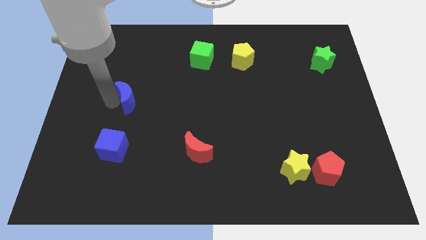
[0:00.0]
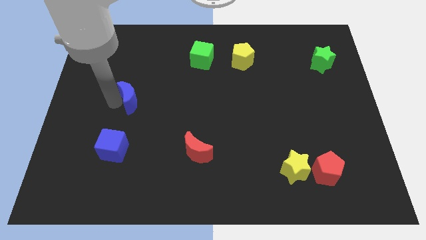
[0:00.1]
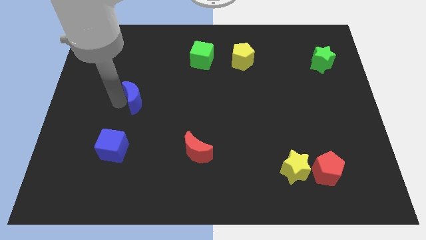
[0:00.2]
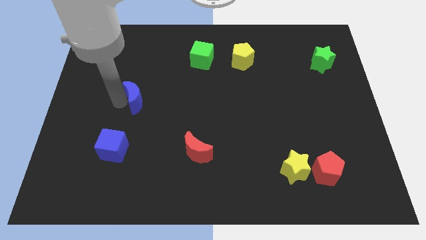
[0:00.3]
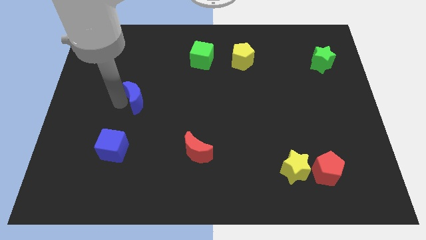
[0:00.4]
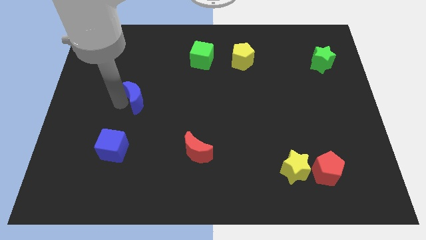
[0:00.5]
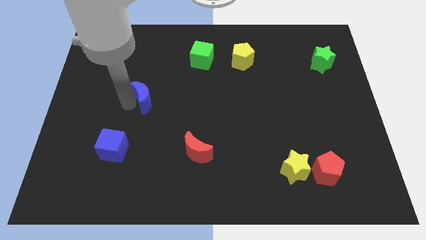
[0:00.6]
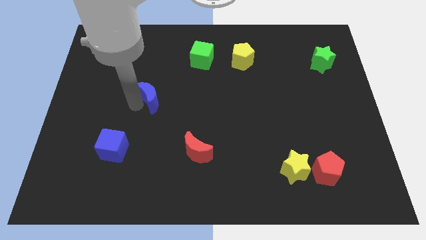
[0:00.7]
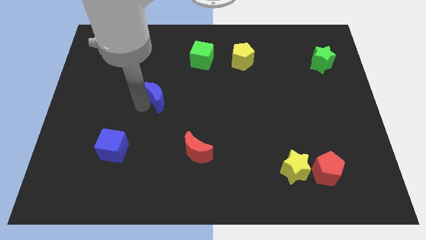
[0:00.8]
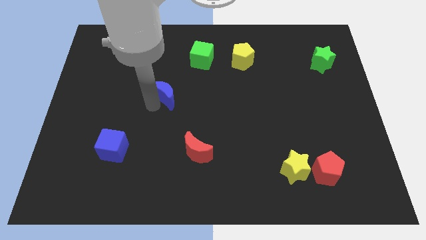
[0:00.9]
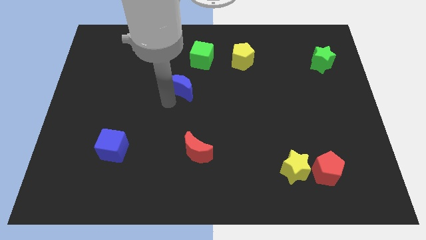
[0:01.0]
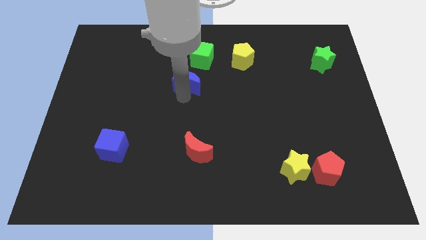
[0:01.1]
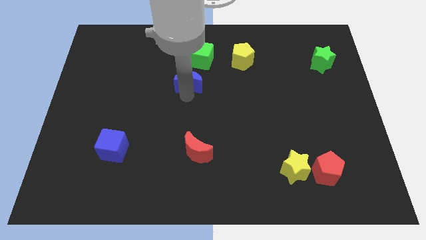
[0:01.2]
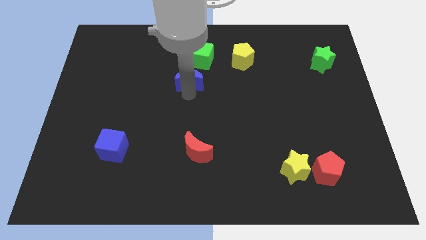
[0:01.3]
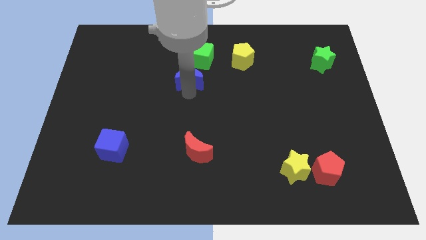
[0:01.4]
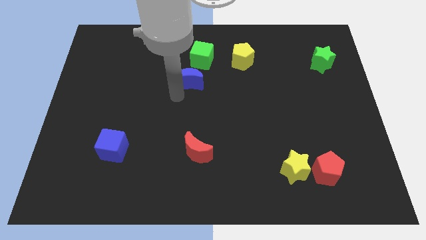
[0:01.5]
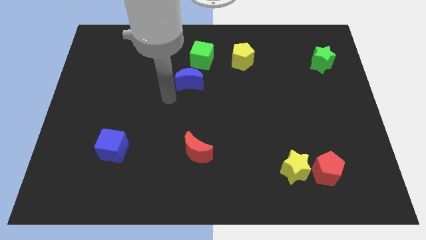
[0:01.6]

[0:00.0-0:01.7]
place the blue crescent under the green cube

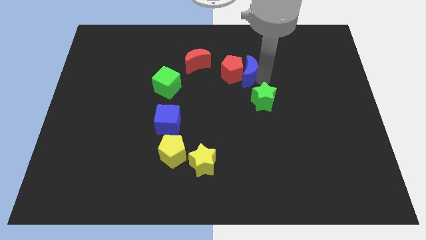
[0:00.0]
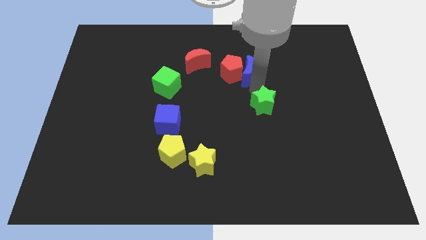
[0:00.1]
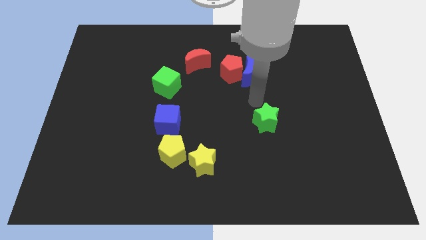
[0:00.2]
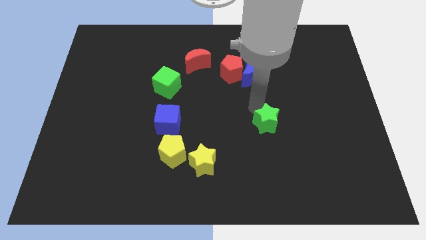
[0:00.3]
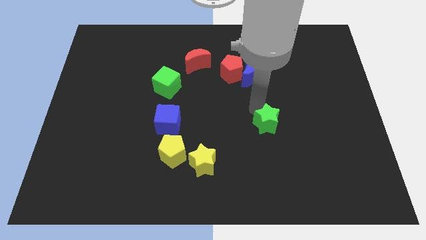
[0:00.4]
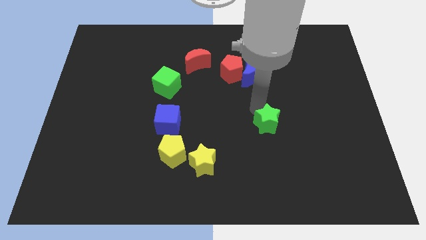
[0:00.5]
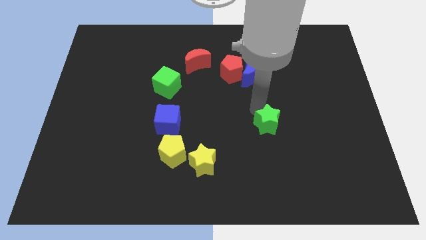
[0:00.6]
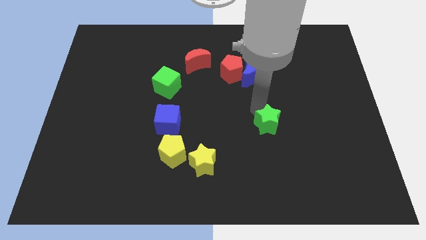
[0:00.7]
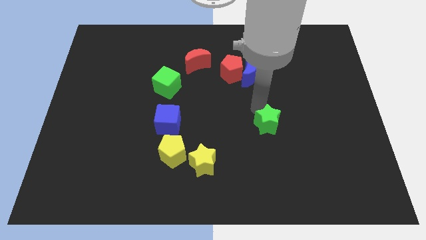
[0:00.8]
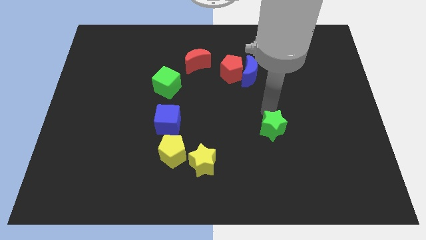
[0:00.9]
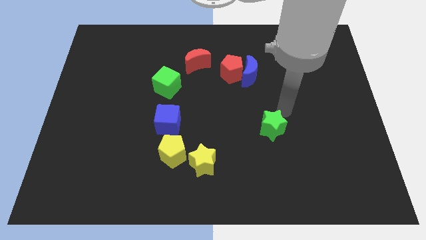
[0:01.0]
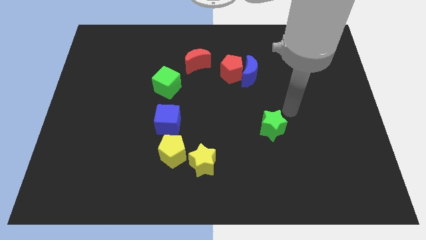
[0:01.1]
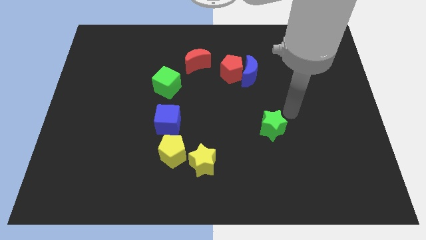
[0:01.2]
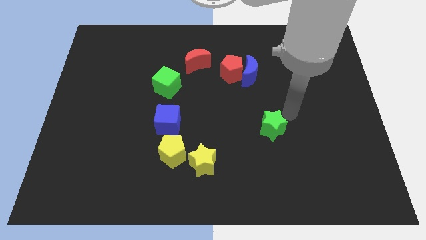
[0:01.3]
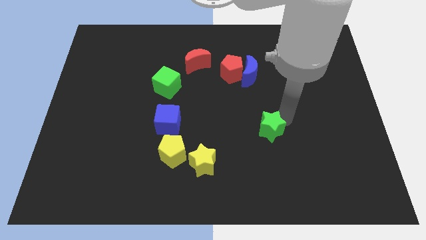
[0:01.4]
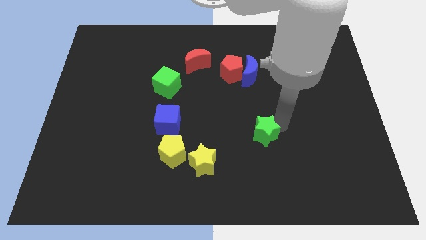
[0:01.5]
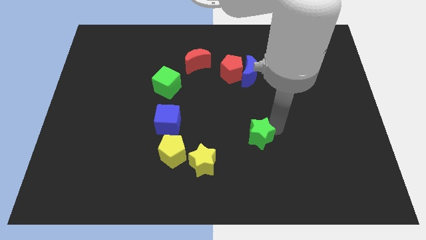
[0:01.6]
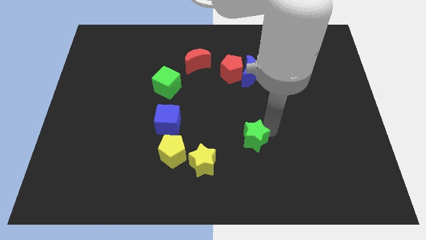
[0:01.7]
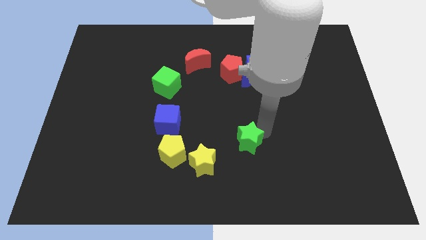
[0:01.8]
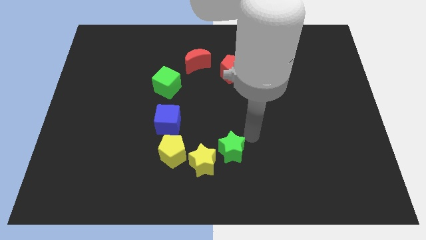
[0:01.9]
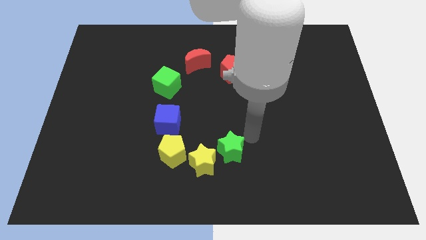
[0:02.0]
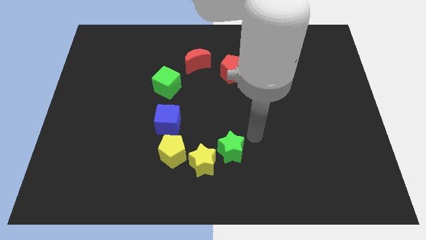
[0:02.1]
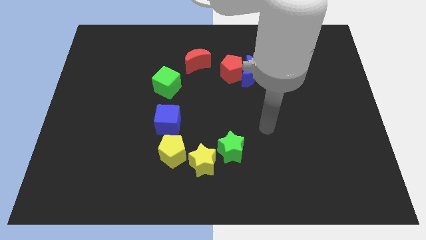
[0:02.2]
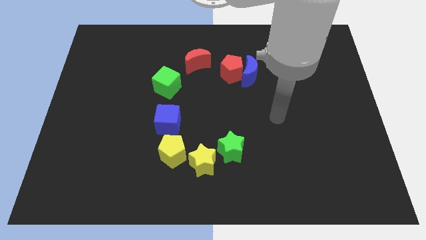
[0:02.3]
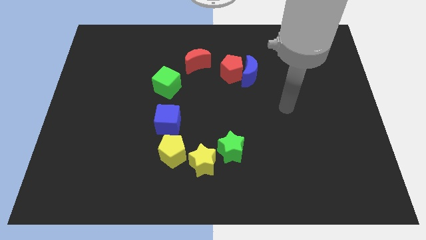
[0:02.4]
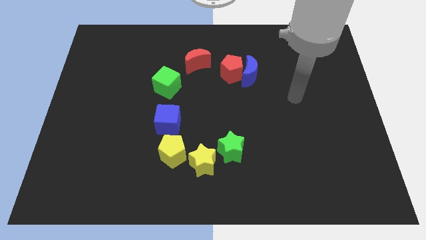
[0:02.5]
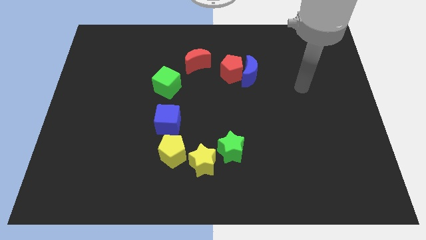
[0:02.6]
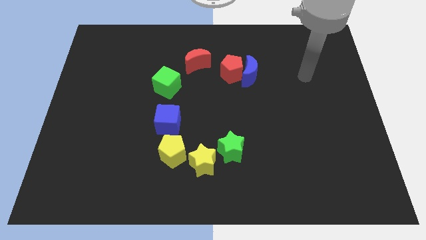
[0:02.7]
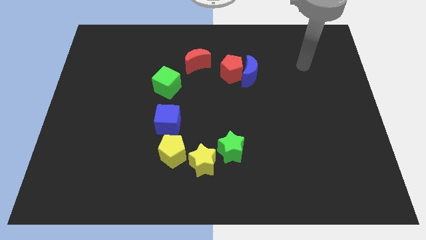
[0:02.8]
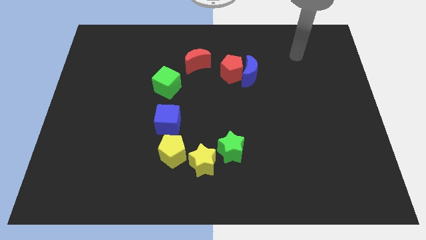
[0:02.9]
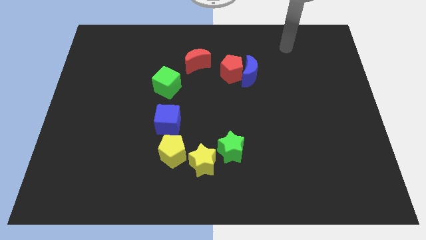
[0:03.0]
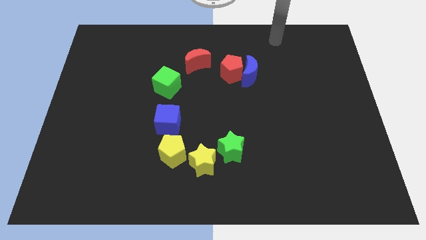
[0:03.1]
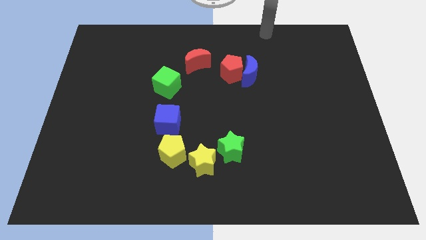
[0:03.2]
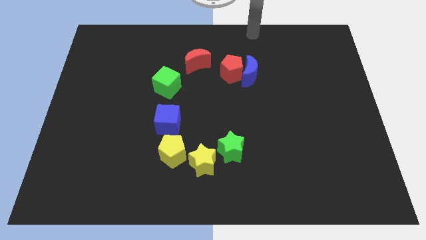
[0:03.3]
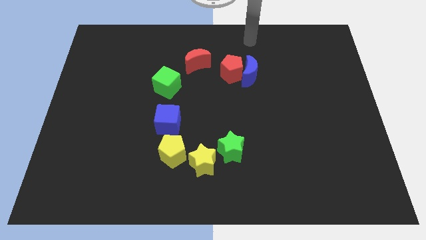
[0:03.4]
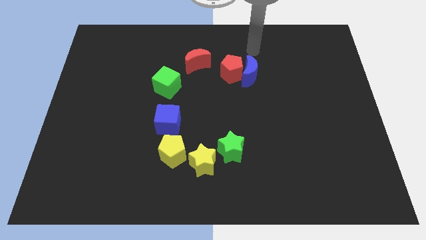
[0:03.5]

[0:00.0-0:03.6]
push the green star close to the yellow star

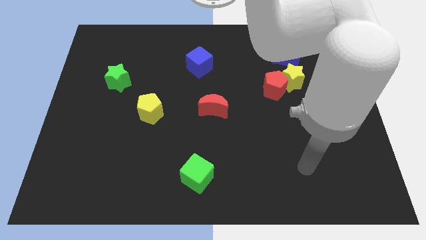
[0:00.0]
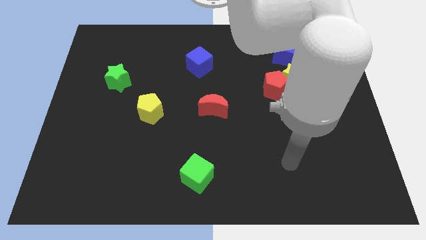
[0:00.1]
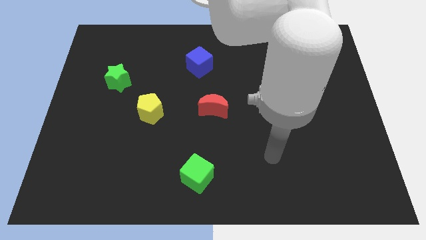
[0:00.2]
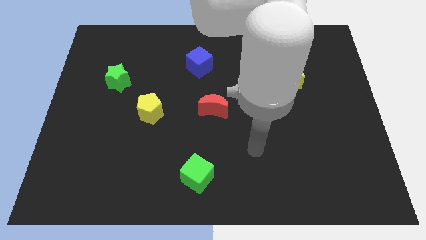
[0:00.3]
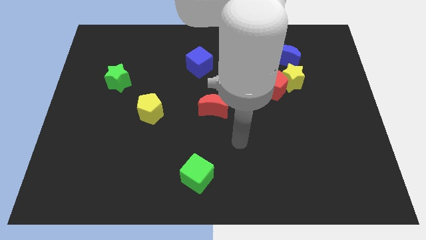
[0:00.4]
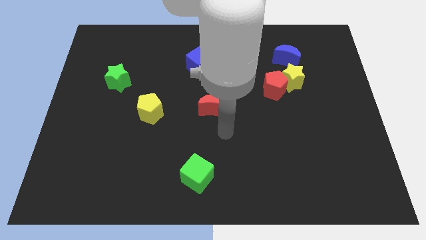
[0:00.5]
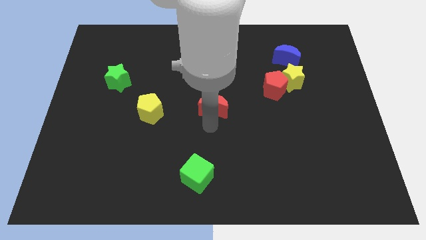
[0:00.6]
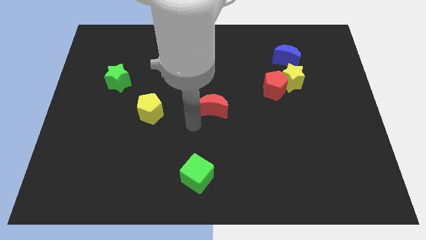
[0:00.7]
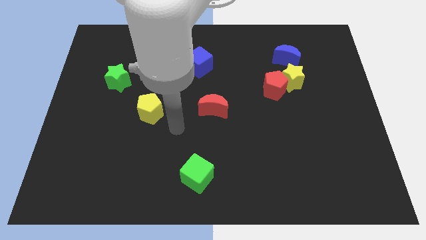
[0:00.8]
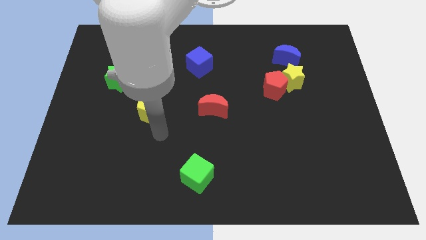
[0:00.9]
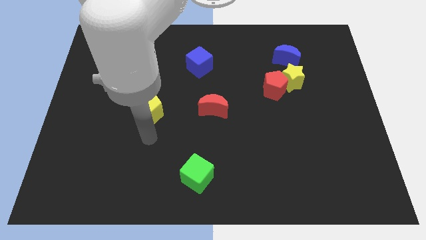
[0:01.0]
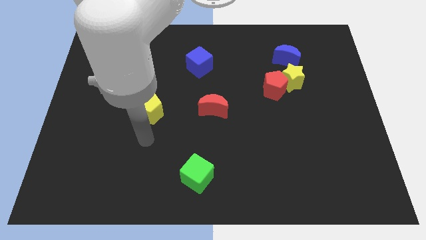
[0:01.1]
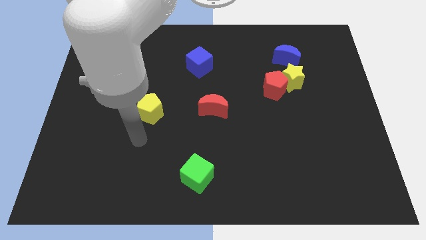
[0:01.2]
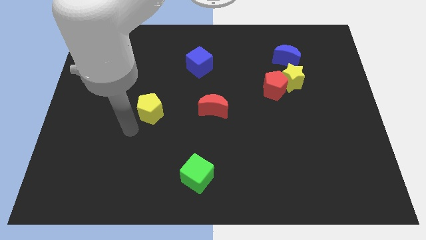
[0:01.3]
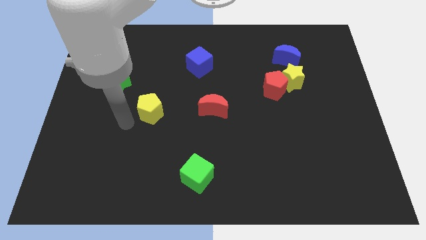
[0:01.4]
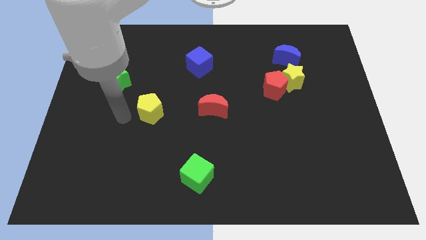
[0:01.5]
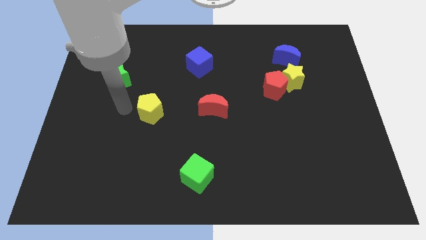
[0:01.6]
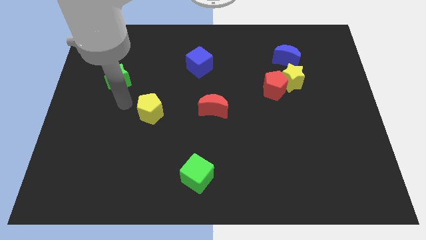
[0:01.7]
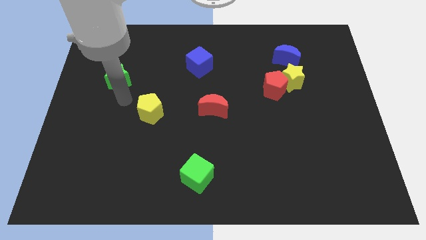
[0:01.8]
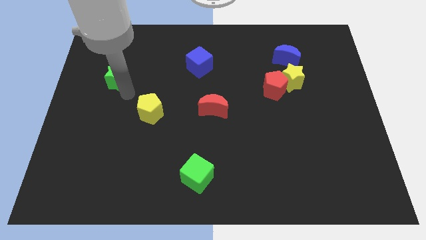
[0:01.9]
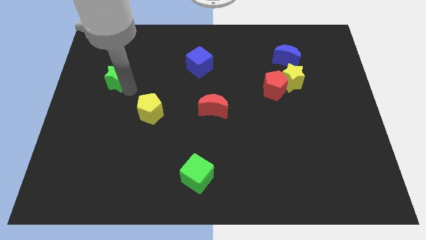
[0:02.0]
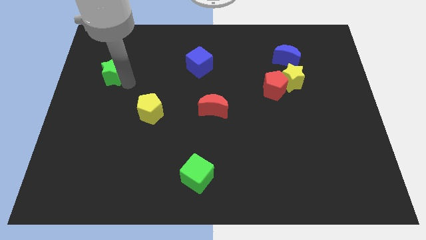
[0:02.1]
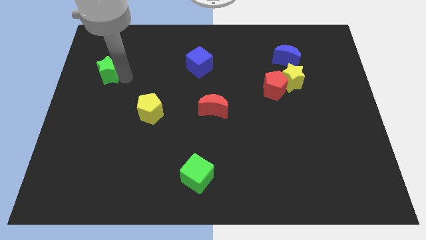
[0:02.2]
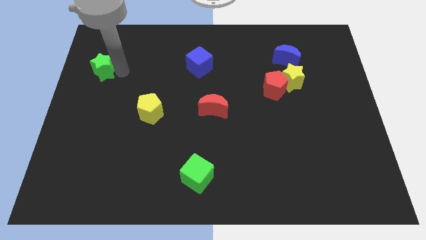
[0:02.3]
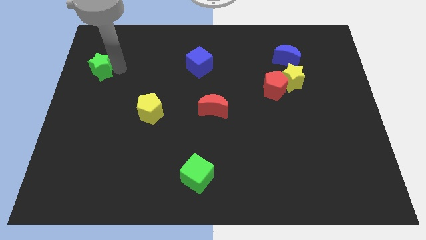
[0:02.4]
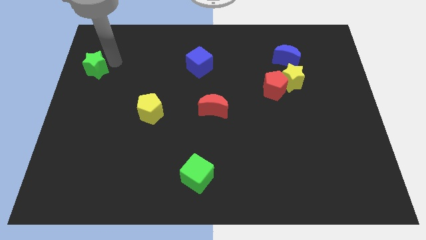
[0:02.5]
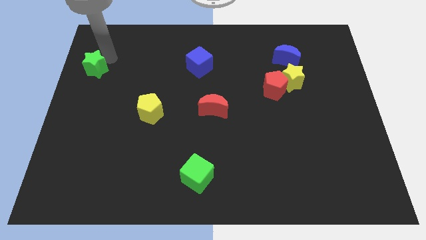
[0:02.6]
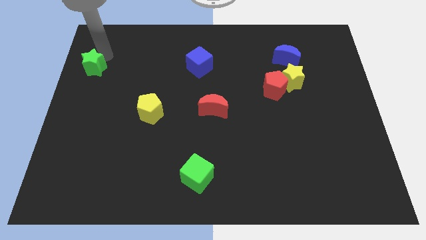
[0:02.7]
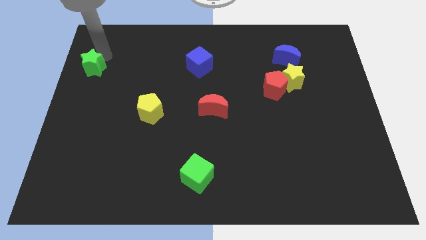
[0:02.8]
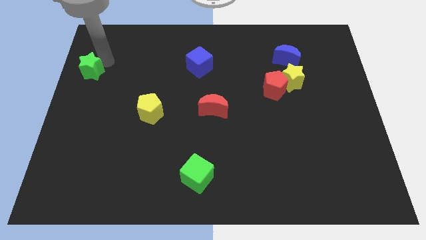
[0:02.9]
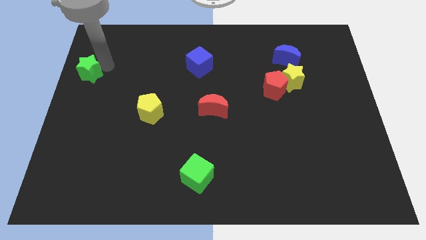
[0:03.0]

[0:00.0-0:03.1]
slide the green star towards the top left of the board

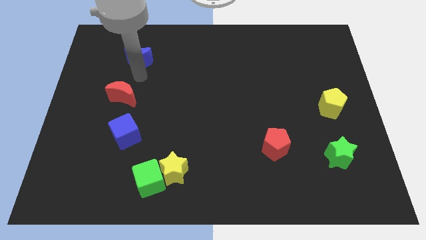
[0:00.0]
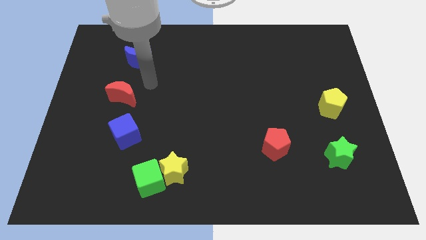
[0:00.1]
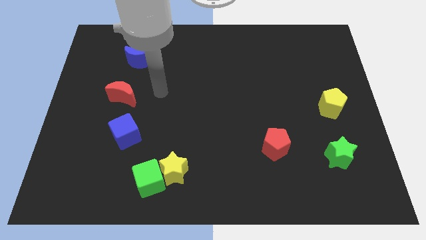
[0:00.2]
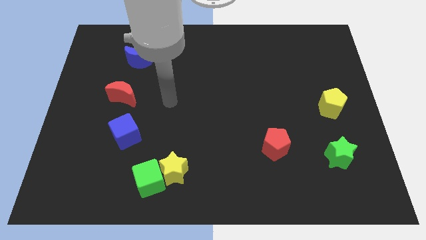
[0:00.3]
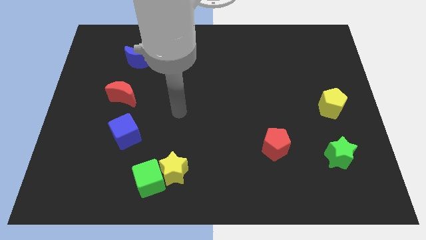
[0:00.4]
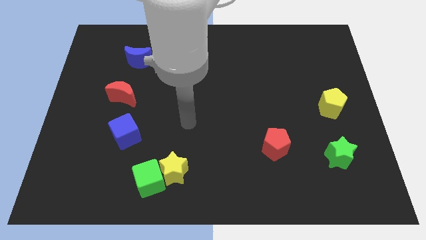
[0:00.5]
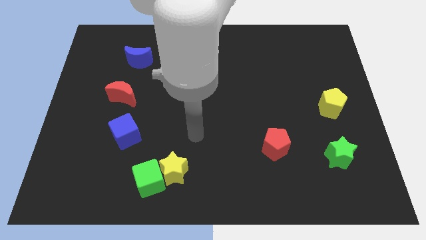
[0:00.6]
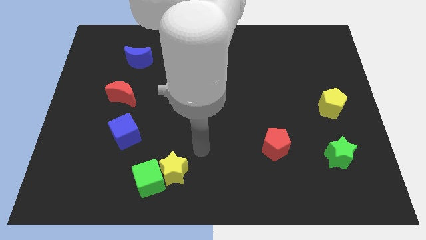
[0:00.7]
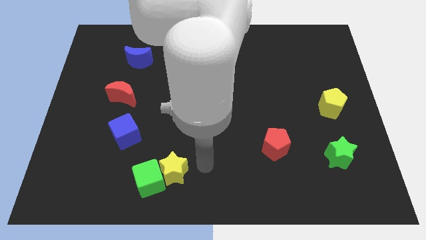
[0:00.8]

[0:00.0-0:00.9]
move arm towards yellow star
